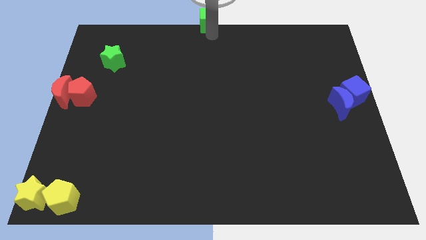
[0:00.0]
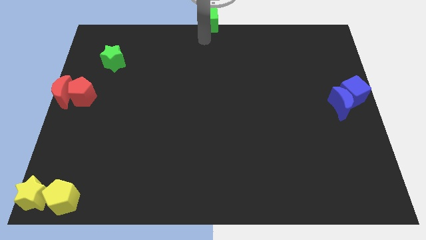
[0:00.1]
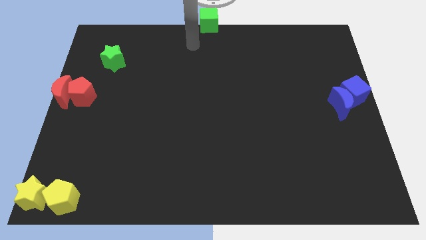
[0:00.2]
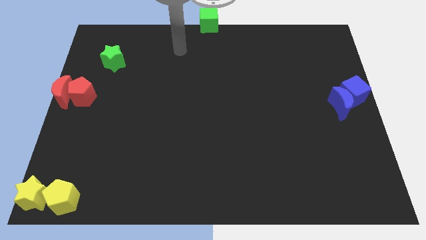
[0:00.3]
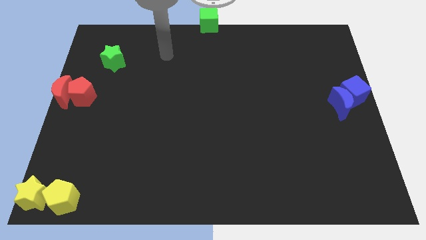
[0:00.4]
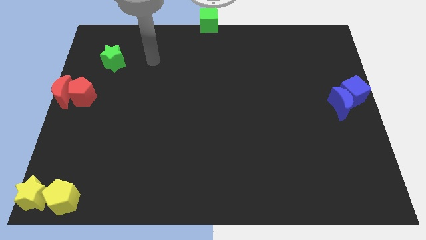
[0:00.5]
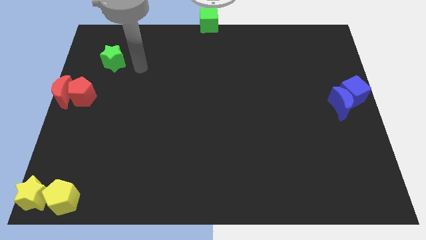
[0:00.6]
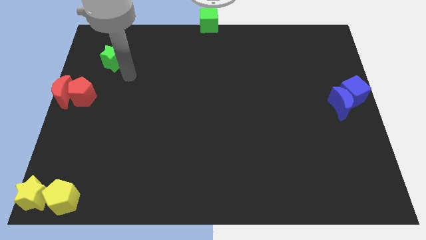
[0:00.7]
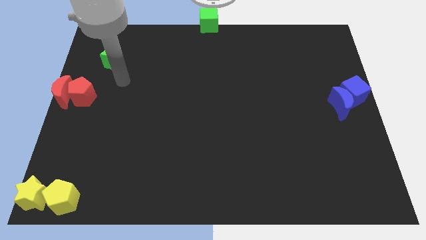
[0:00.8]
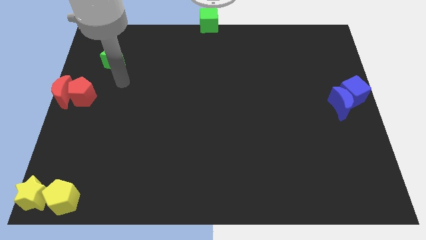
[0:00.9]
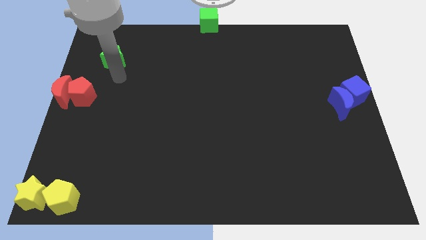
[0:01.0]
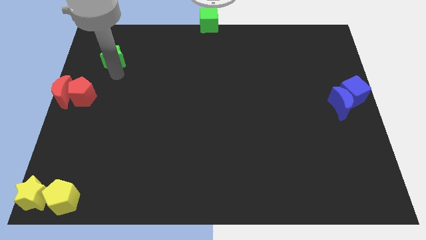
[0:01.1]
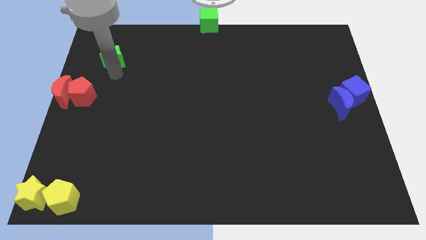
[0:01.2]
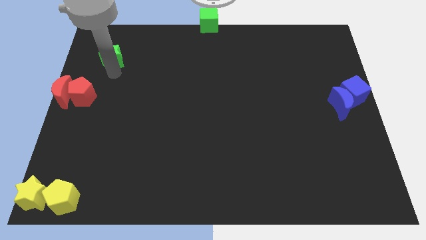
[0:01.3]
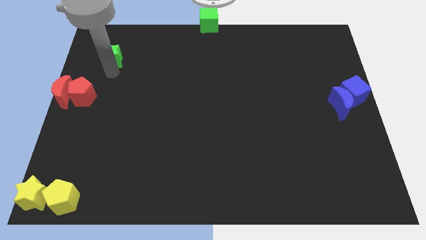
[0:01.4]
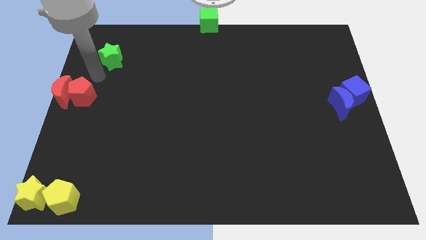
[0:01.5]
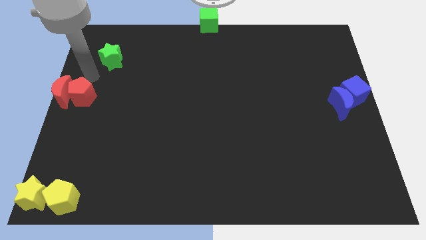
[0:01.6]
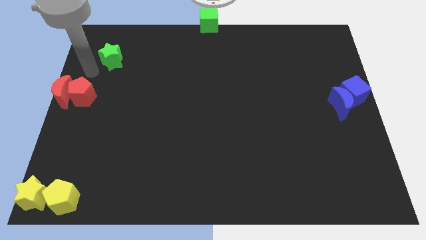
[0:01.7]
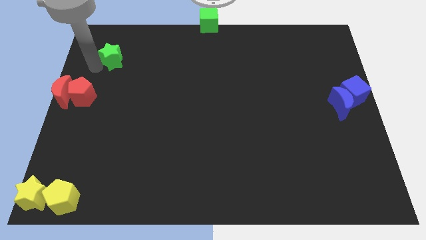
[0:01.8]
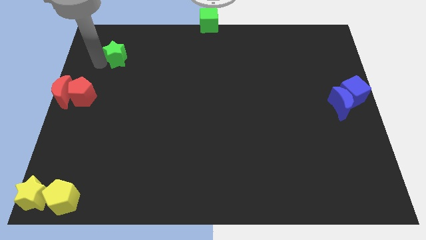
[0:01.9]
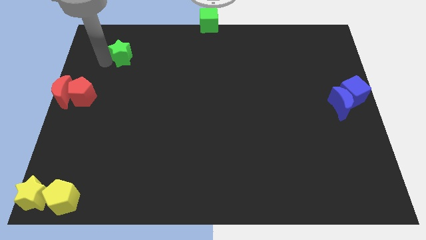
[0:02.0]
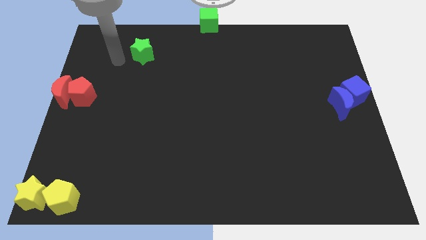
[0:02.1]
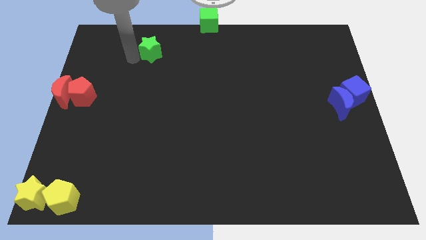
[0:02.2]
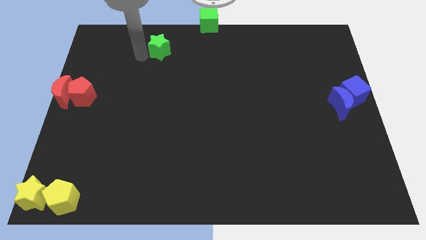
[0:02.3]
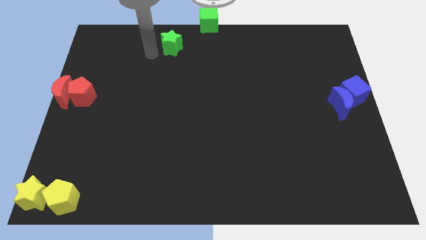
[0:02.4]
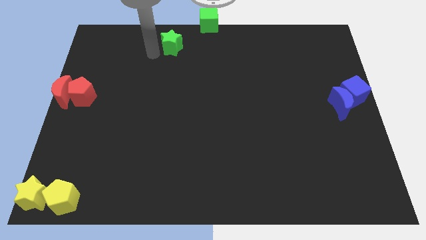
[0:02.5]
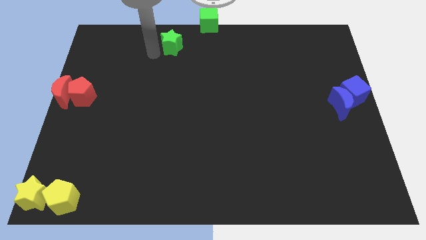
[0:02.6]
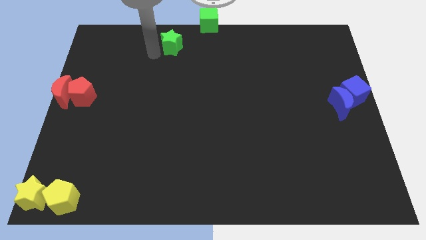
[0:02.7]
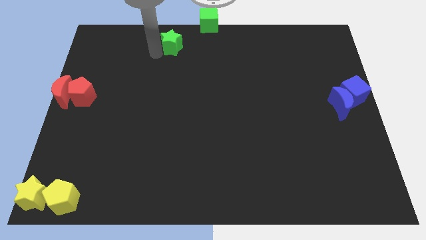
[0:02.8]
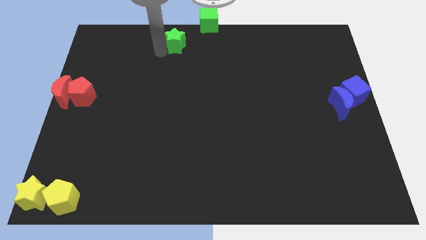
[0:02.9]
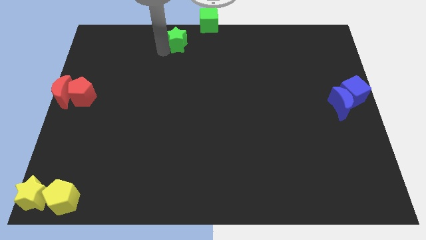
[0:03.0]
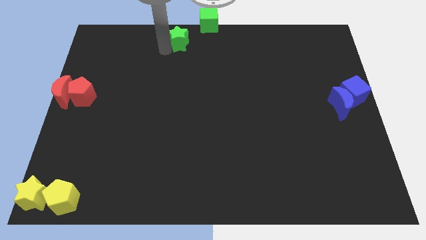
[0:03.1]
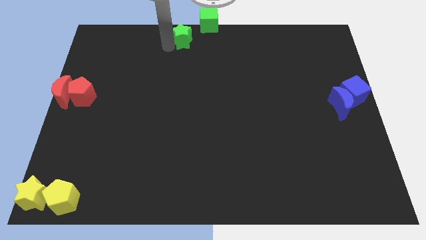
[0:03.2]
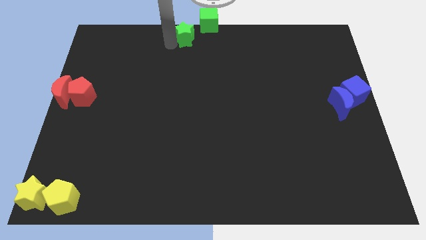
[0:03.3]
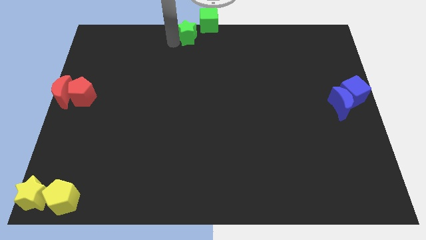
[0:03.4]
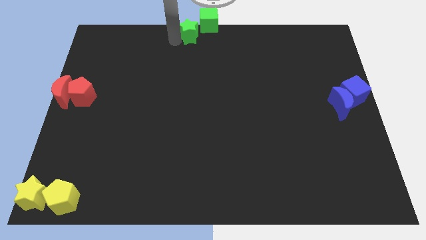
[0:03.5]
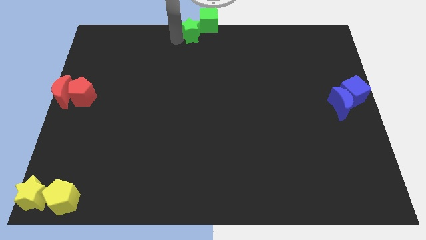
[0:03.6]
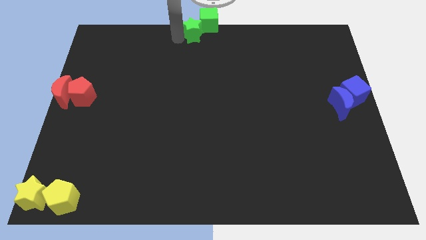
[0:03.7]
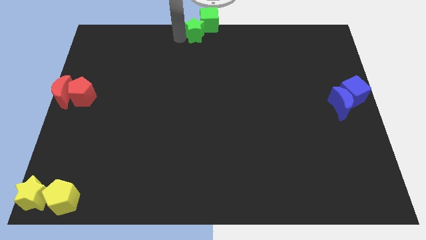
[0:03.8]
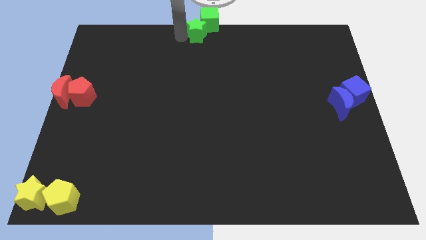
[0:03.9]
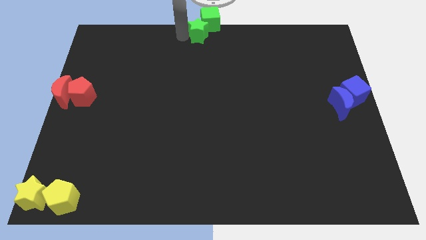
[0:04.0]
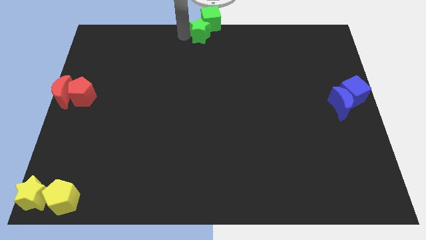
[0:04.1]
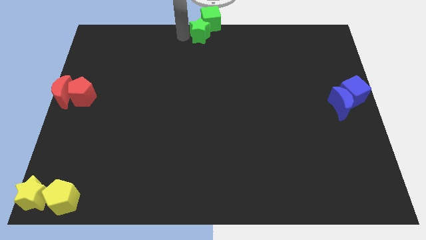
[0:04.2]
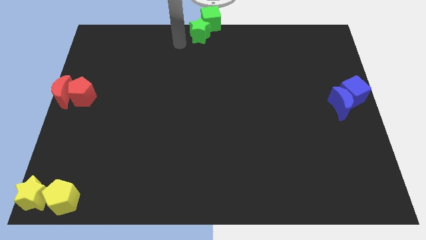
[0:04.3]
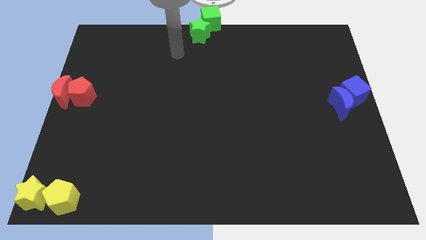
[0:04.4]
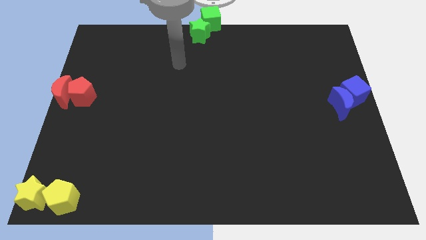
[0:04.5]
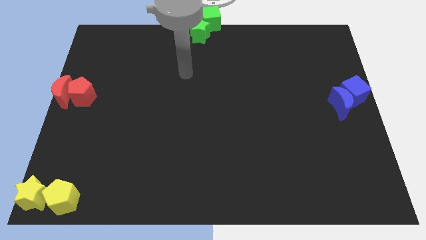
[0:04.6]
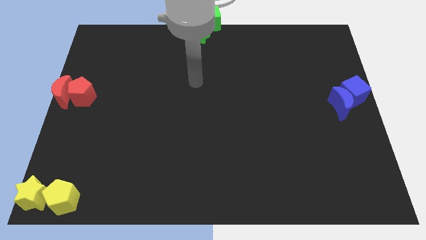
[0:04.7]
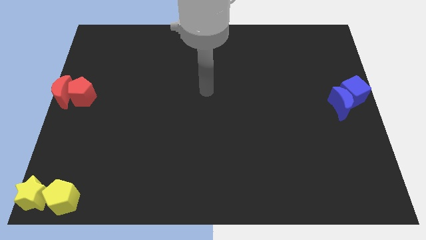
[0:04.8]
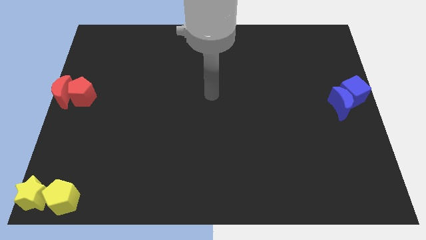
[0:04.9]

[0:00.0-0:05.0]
push the green star to the bottom left of the green cube

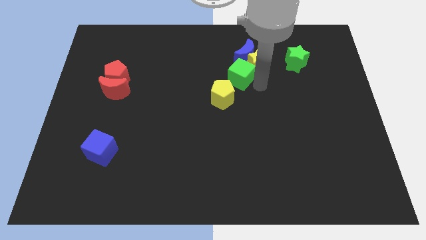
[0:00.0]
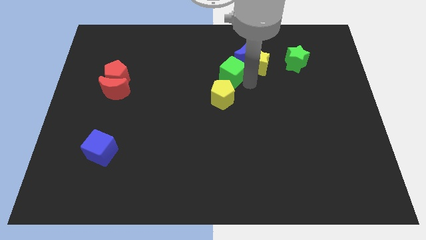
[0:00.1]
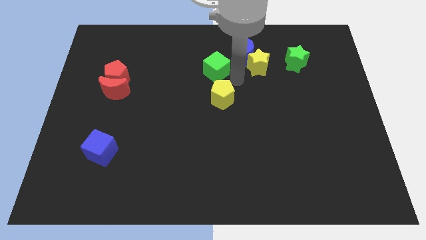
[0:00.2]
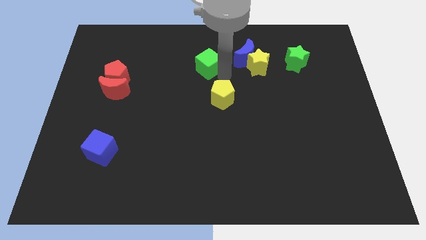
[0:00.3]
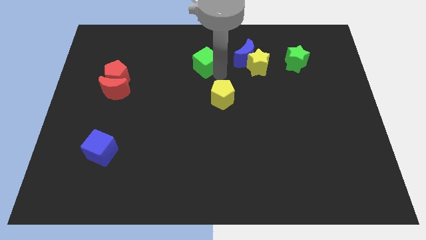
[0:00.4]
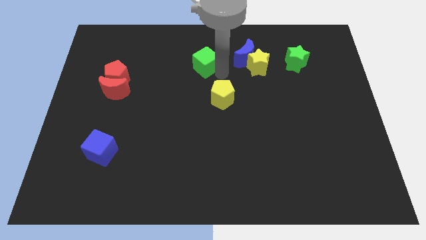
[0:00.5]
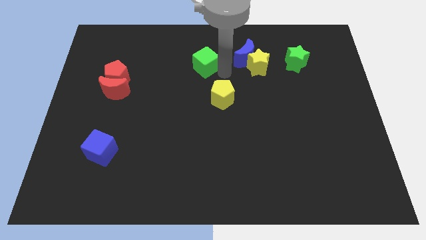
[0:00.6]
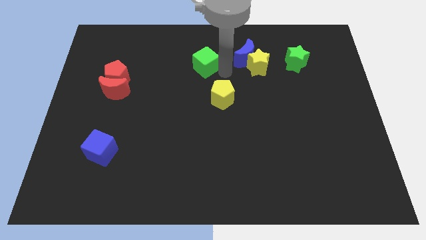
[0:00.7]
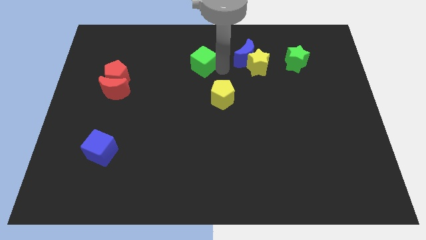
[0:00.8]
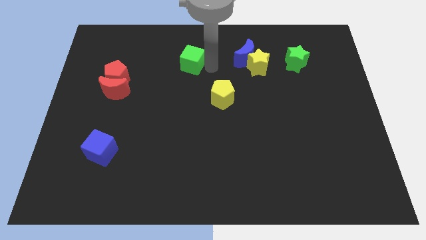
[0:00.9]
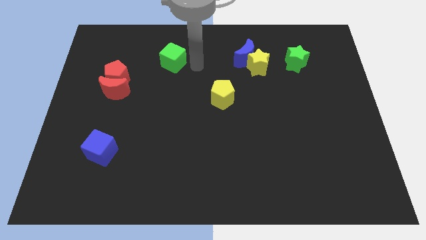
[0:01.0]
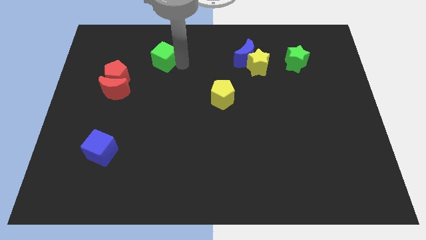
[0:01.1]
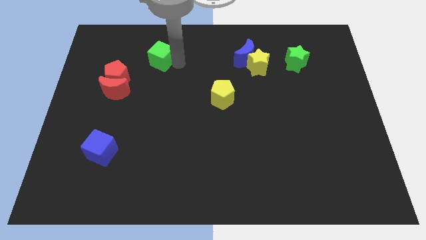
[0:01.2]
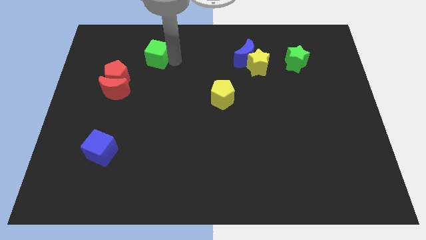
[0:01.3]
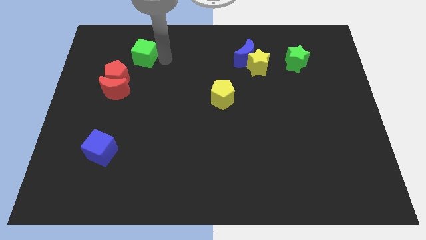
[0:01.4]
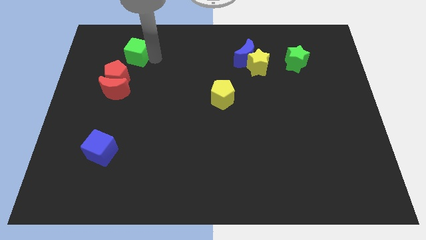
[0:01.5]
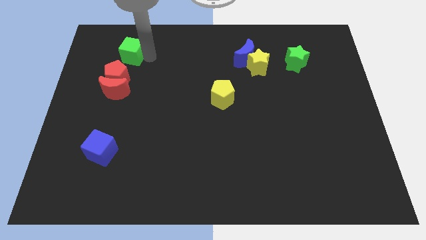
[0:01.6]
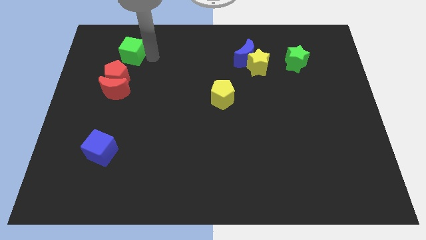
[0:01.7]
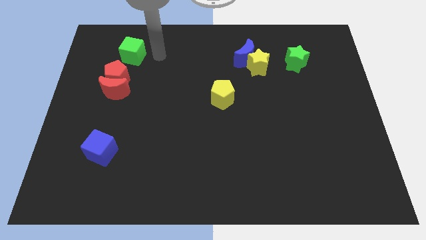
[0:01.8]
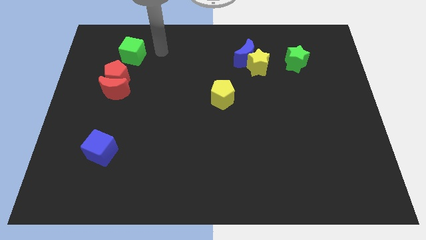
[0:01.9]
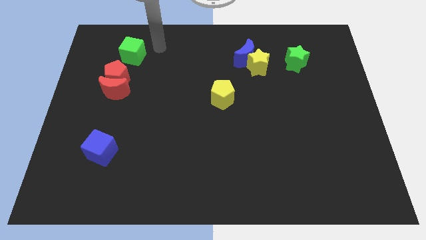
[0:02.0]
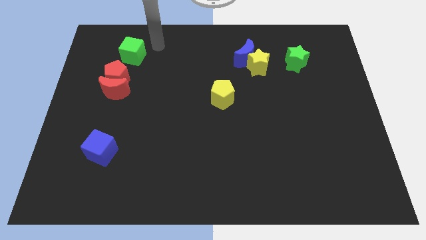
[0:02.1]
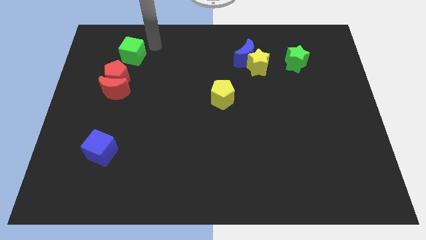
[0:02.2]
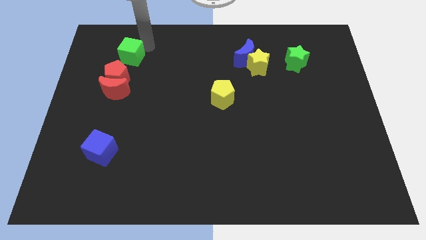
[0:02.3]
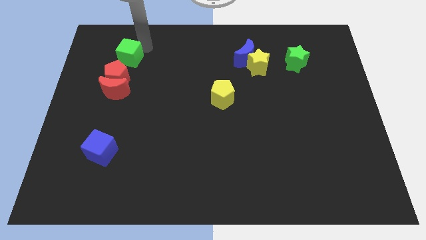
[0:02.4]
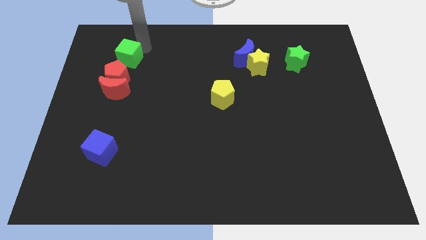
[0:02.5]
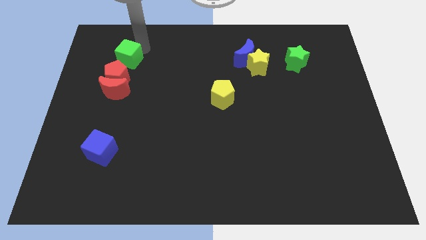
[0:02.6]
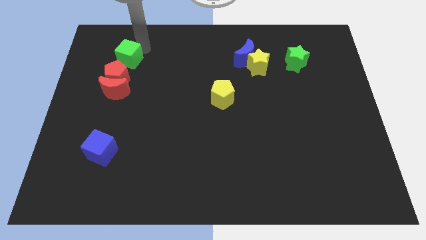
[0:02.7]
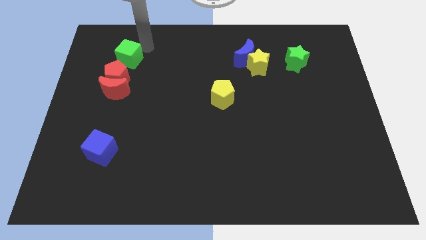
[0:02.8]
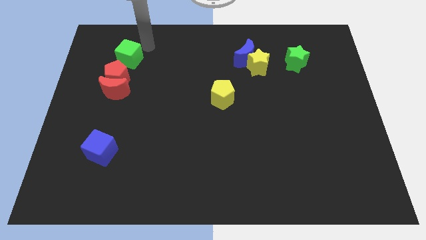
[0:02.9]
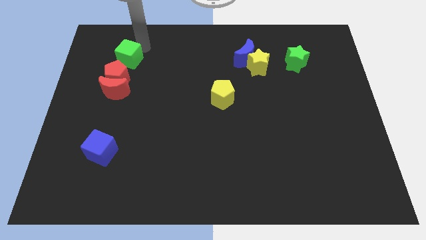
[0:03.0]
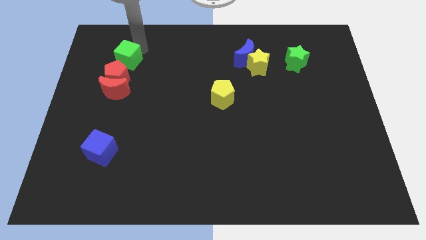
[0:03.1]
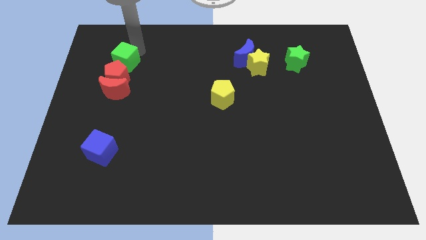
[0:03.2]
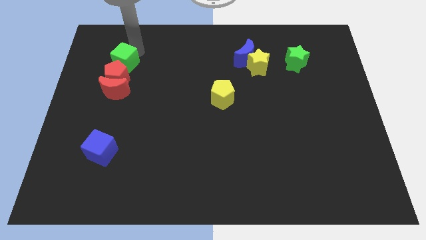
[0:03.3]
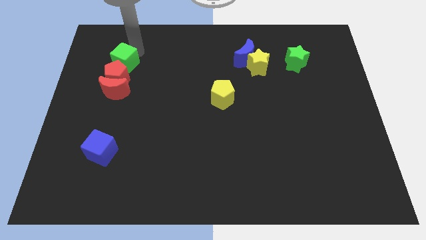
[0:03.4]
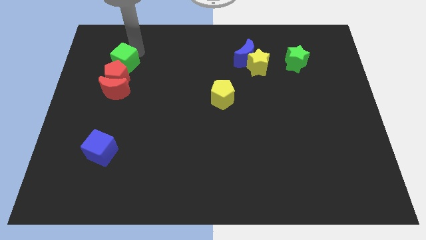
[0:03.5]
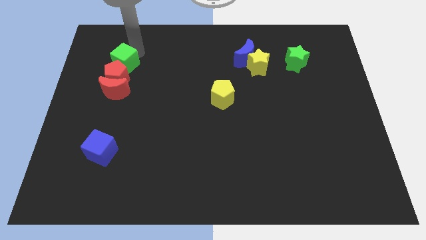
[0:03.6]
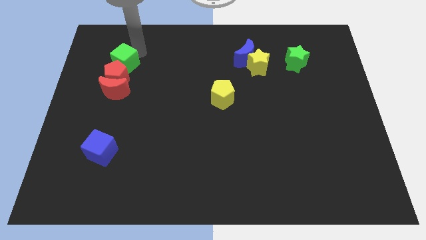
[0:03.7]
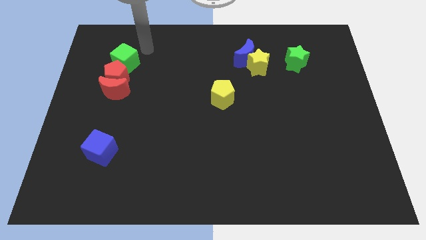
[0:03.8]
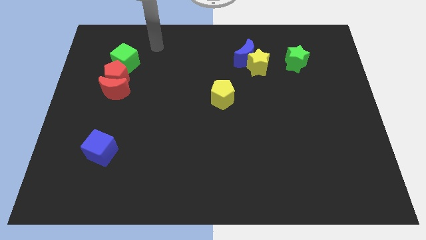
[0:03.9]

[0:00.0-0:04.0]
move the green cube above the red pentagon

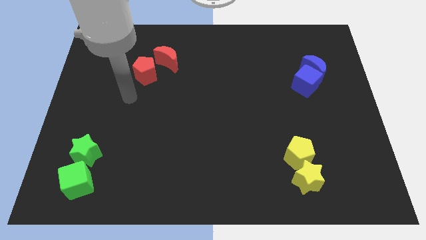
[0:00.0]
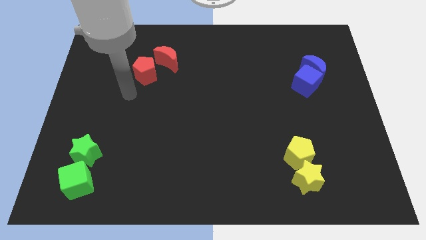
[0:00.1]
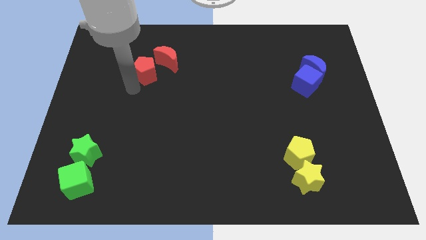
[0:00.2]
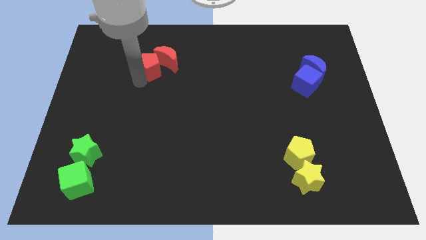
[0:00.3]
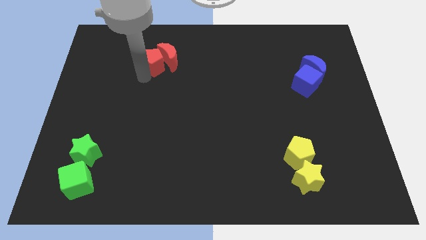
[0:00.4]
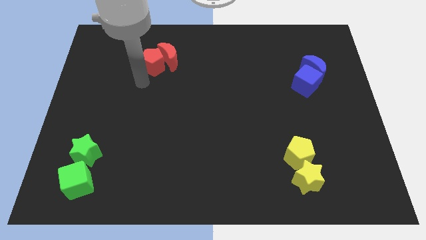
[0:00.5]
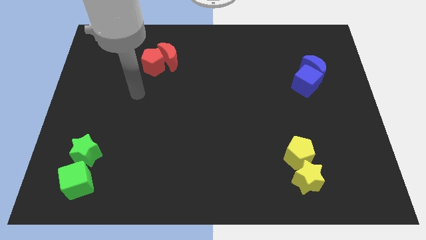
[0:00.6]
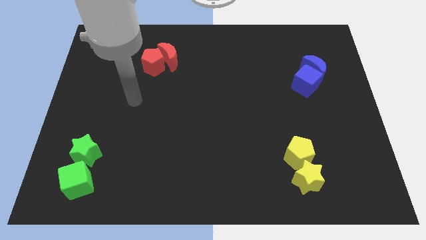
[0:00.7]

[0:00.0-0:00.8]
slide red pentagon in to red crescent
